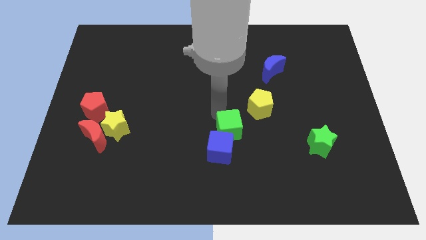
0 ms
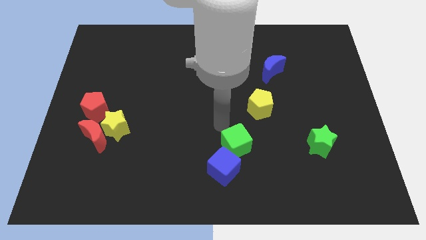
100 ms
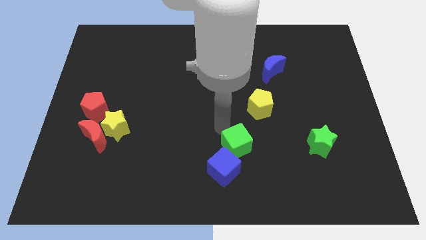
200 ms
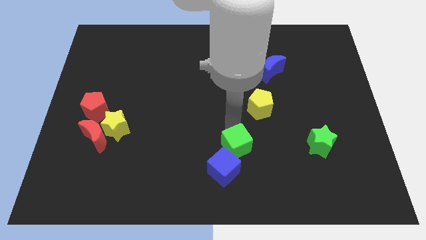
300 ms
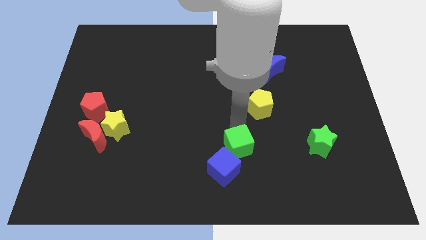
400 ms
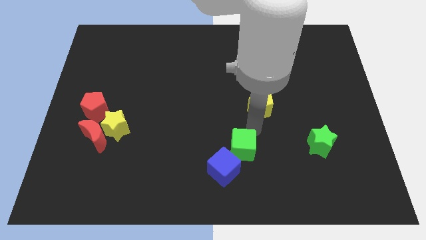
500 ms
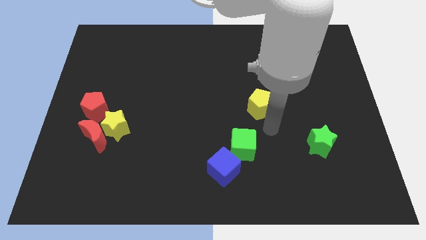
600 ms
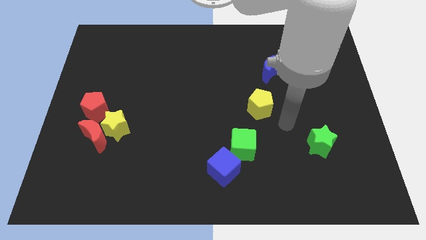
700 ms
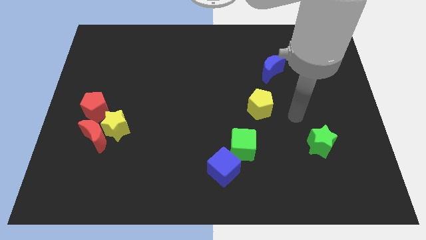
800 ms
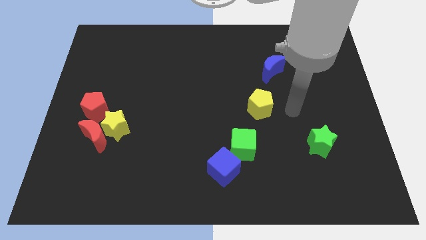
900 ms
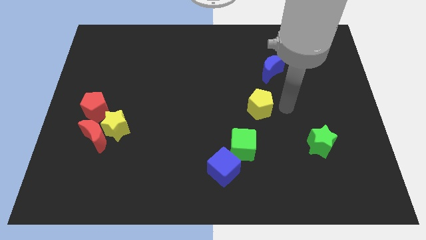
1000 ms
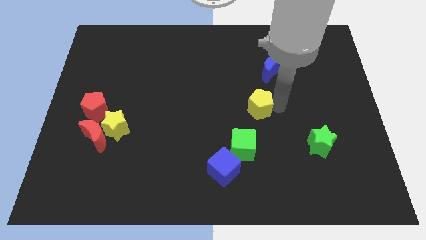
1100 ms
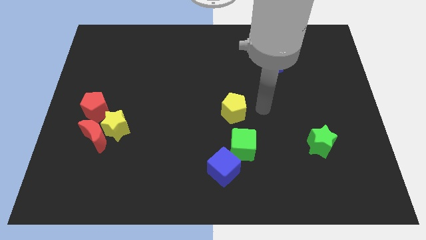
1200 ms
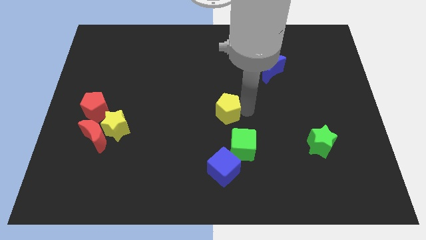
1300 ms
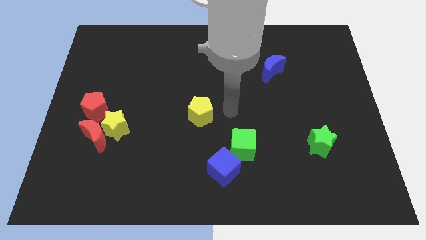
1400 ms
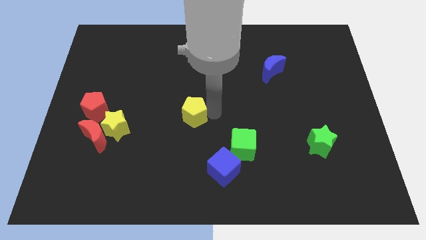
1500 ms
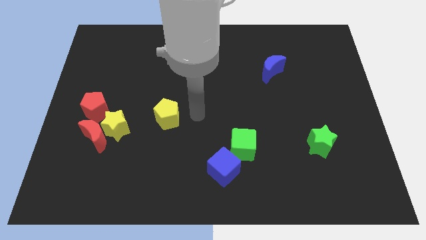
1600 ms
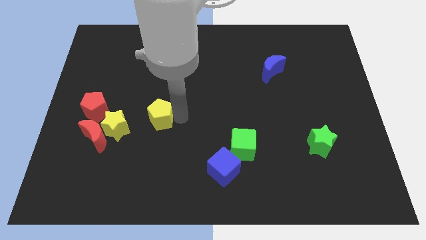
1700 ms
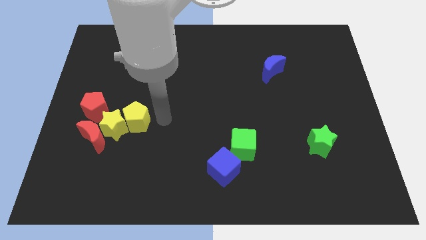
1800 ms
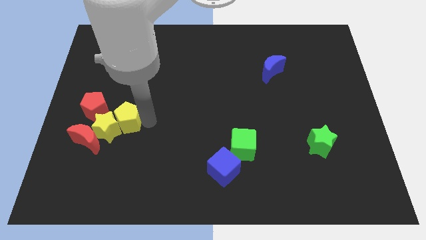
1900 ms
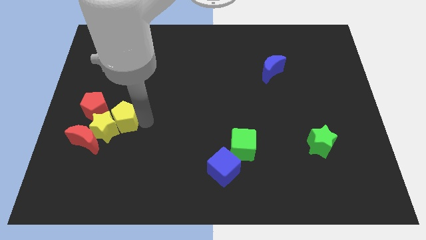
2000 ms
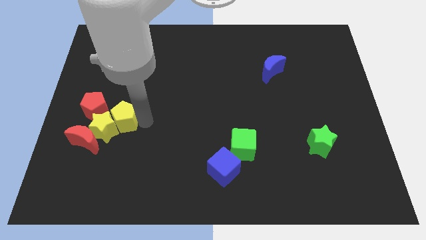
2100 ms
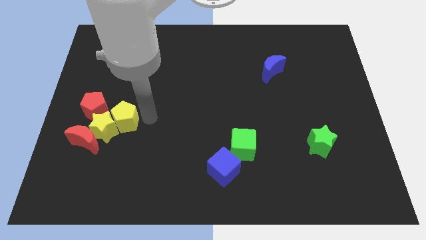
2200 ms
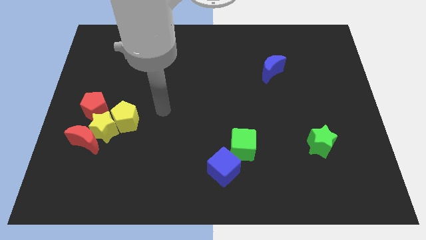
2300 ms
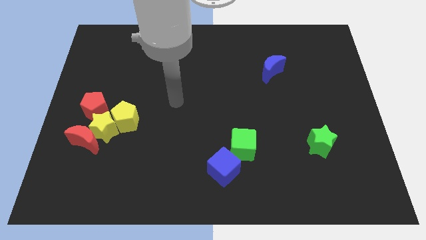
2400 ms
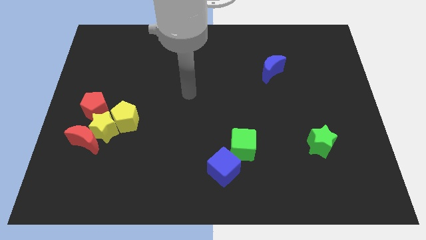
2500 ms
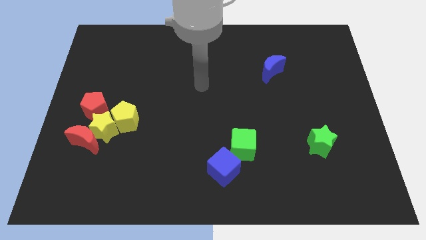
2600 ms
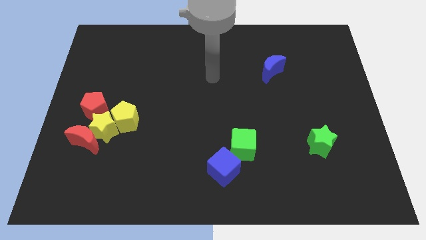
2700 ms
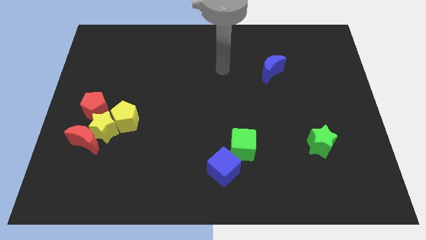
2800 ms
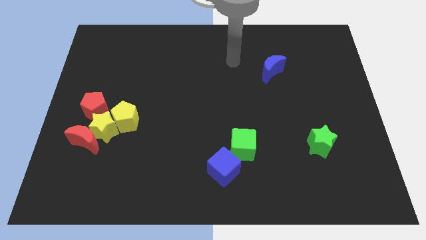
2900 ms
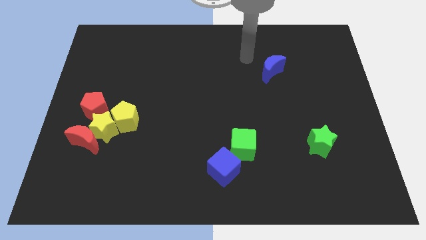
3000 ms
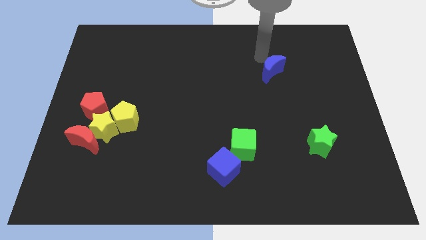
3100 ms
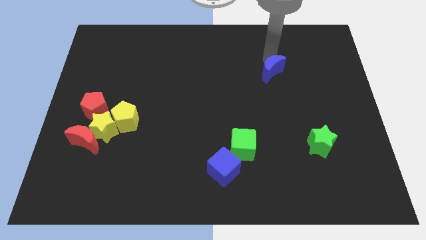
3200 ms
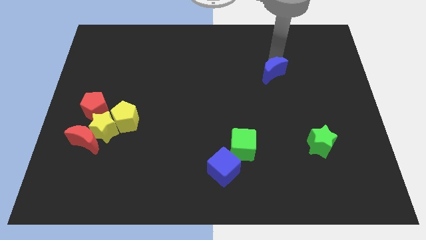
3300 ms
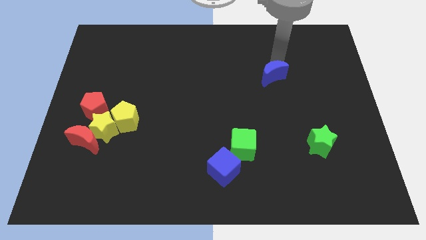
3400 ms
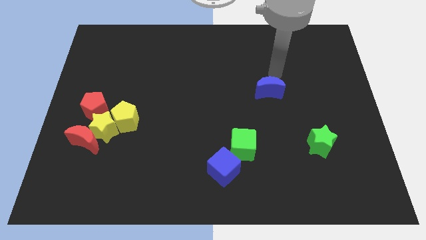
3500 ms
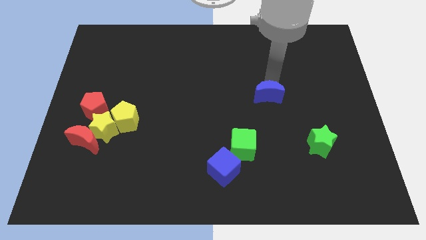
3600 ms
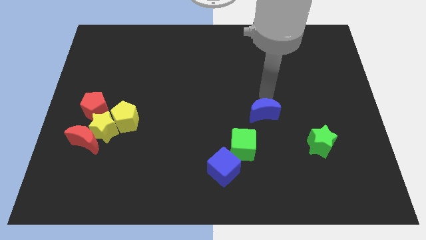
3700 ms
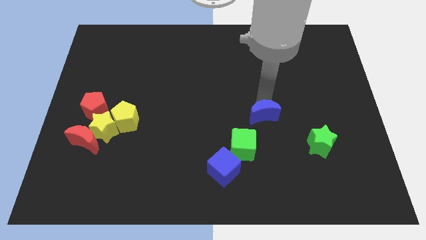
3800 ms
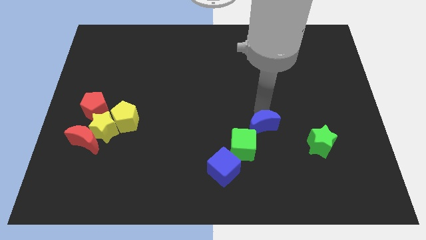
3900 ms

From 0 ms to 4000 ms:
push the yellow pentagon into the yellow star

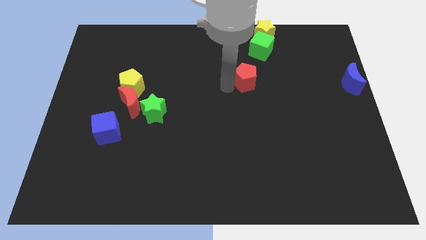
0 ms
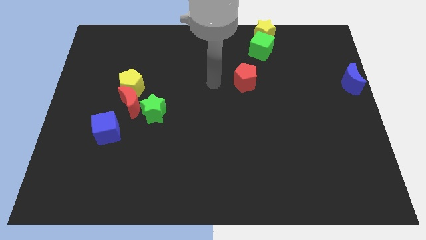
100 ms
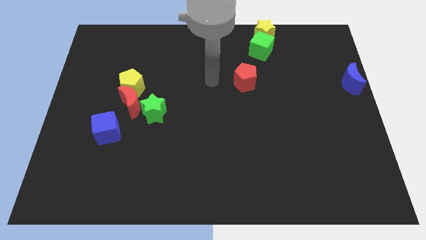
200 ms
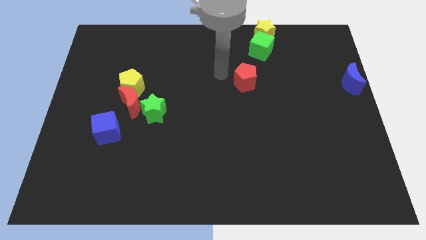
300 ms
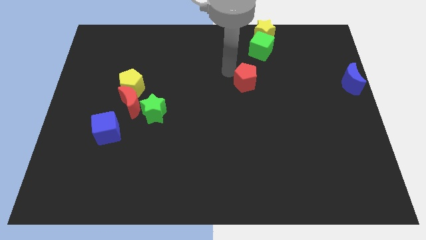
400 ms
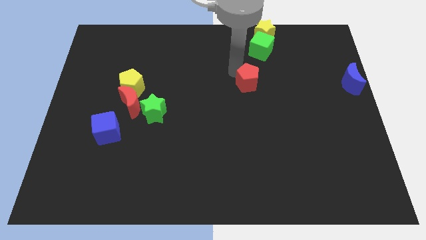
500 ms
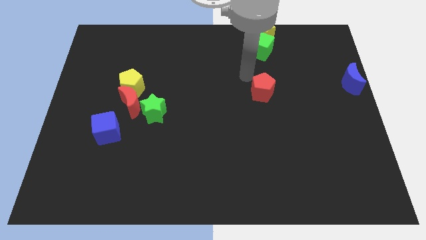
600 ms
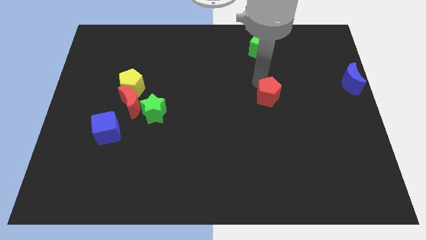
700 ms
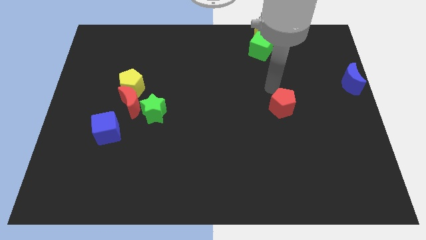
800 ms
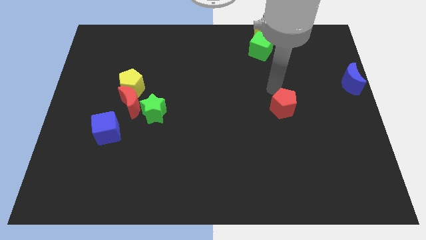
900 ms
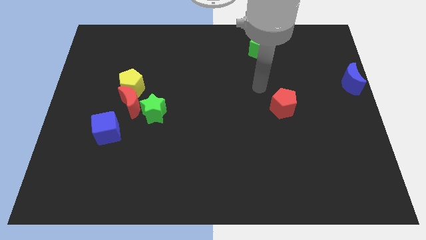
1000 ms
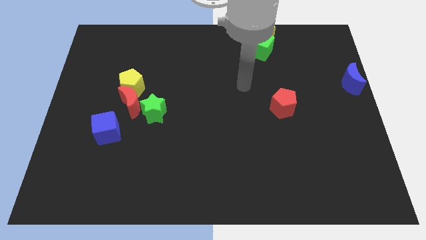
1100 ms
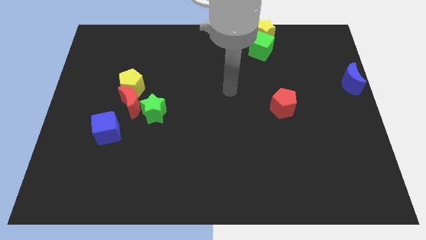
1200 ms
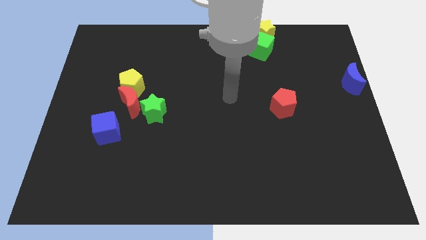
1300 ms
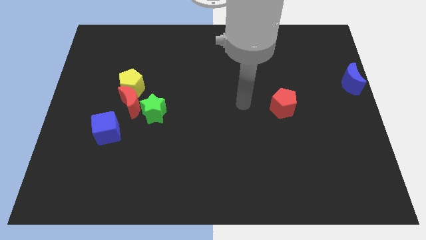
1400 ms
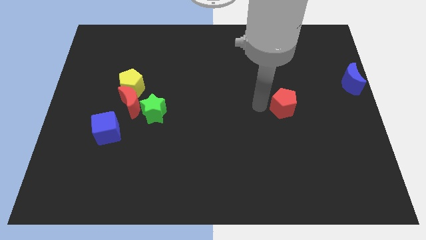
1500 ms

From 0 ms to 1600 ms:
push the red pentagon towards the bottom side of the board

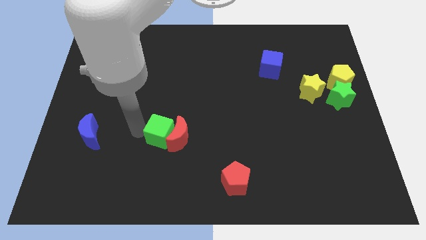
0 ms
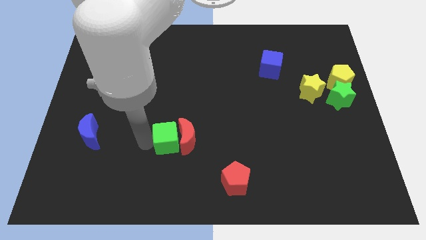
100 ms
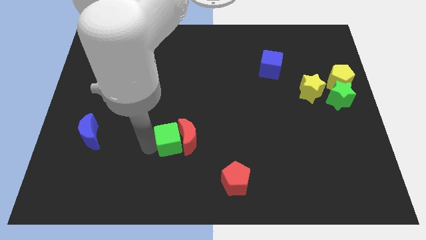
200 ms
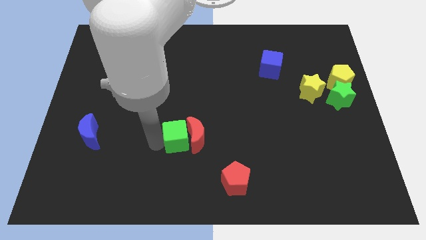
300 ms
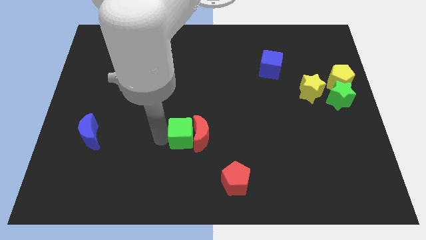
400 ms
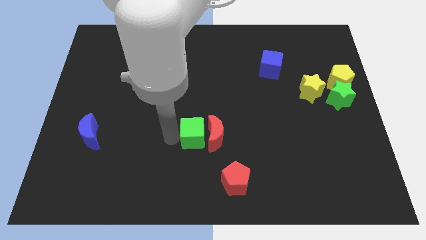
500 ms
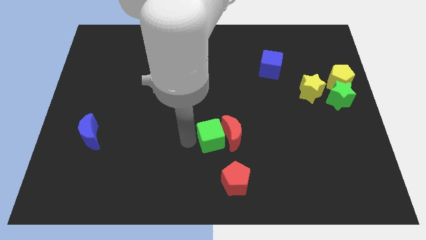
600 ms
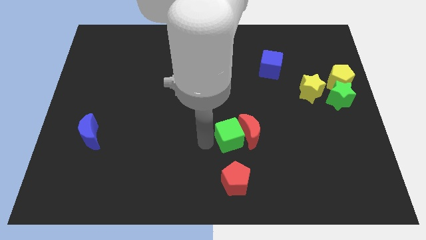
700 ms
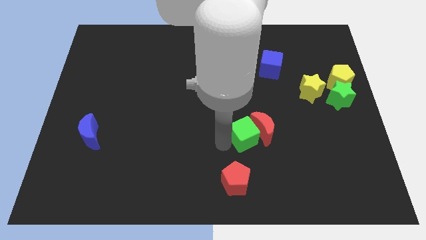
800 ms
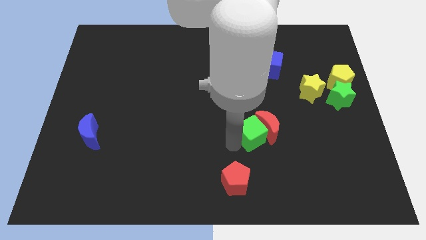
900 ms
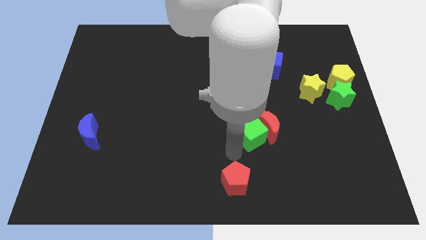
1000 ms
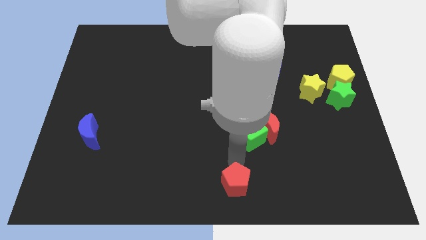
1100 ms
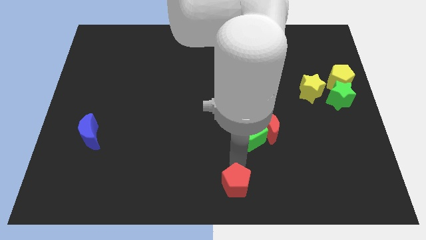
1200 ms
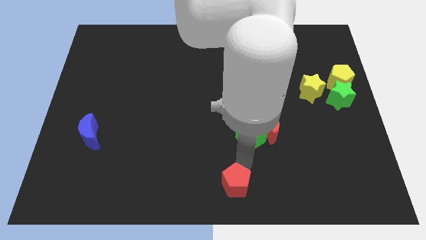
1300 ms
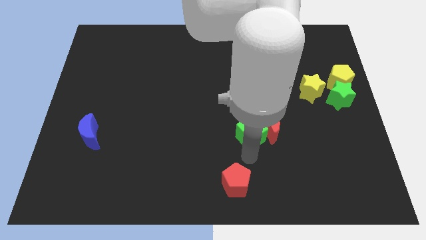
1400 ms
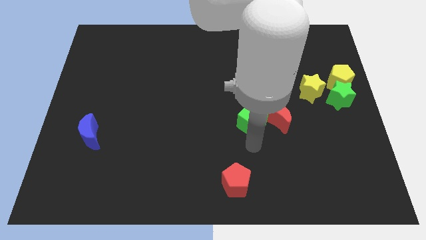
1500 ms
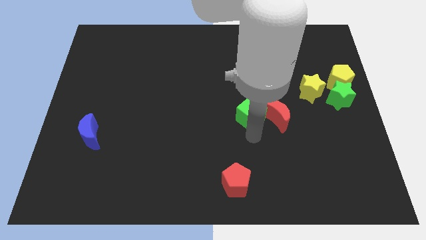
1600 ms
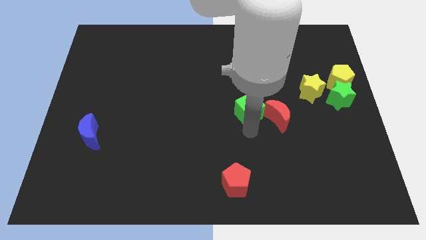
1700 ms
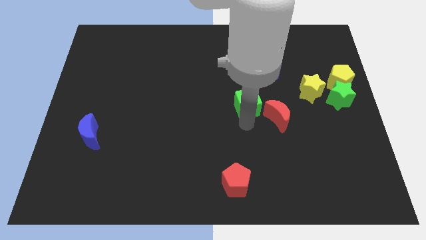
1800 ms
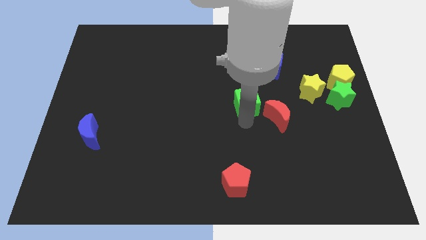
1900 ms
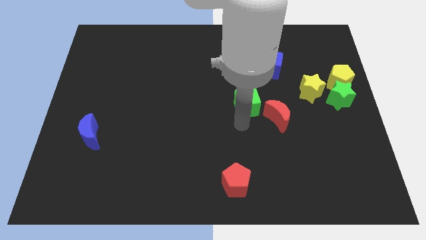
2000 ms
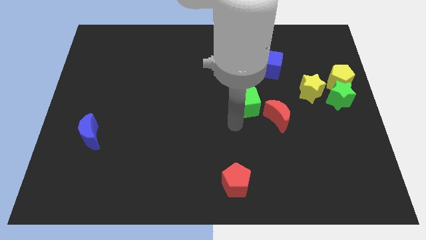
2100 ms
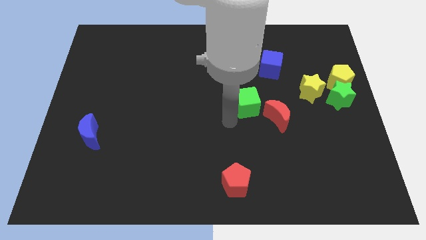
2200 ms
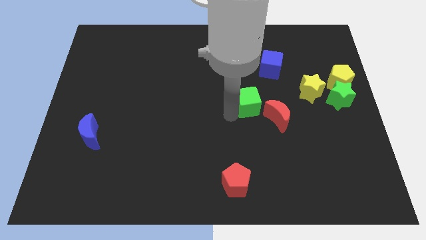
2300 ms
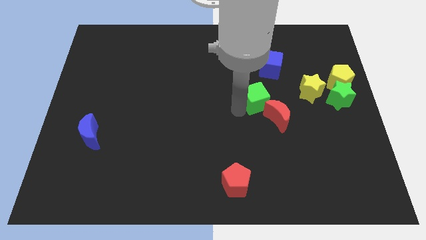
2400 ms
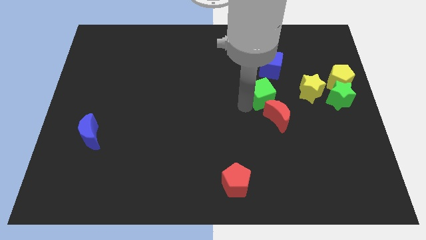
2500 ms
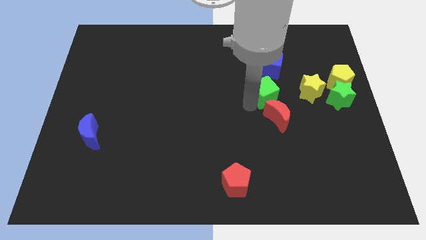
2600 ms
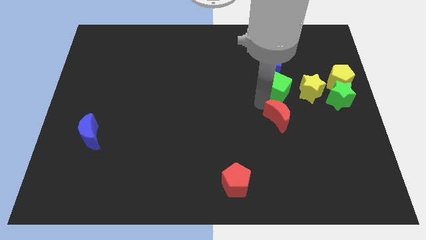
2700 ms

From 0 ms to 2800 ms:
move the green cube down to the blue cube

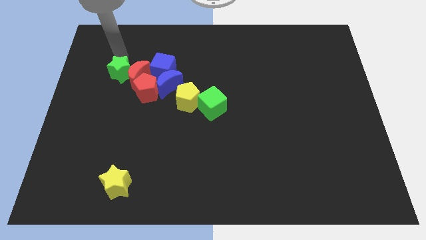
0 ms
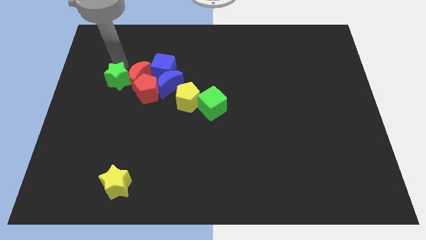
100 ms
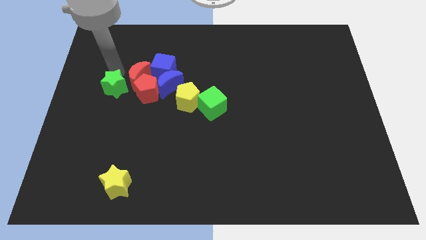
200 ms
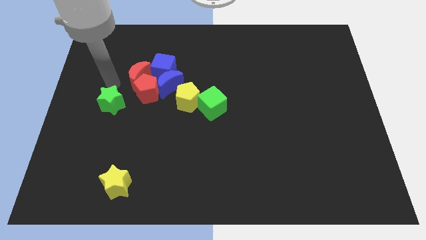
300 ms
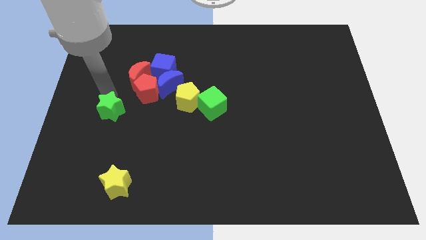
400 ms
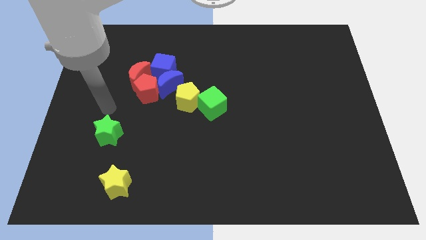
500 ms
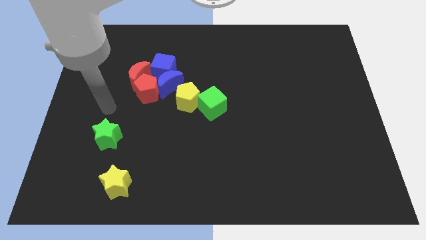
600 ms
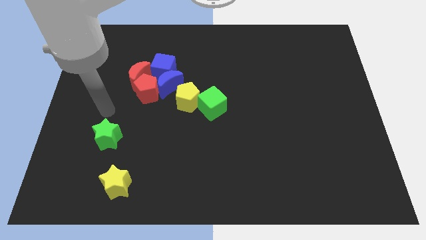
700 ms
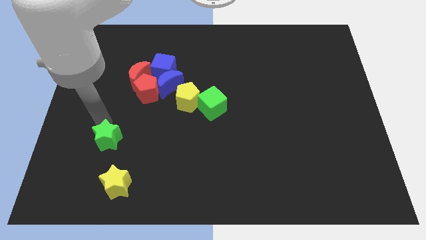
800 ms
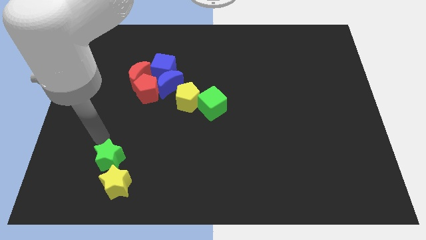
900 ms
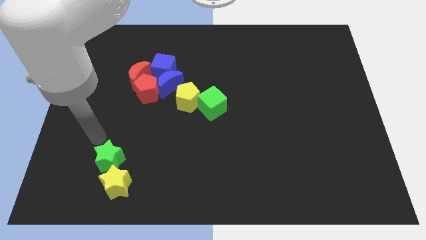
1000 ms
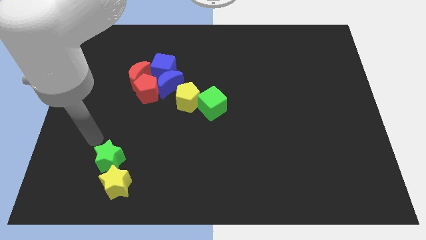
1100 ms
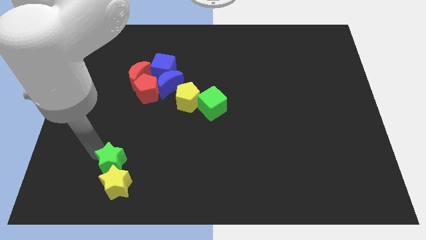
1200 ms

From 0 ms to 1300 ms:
place the green star on top of the yellow star
